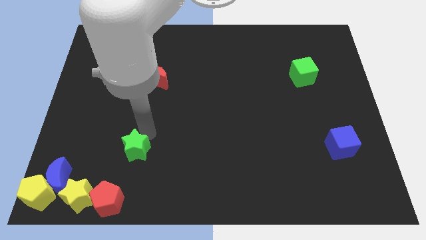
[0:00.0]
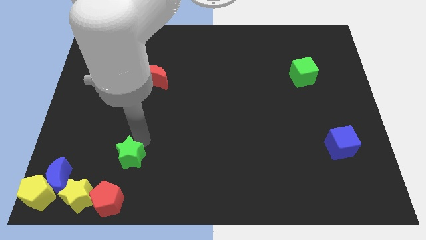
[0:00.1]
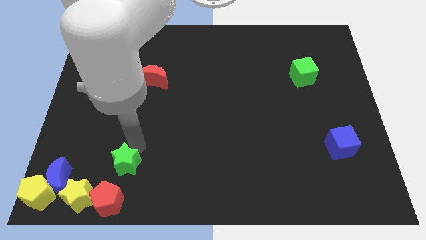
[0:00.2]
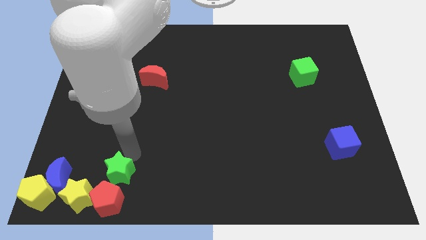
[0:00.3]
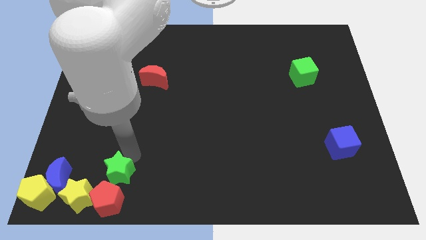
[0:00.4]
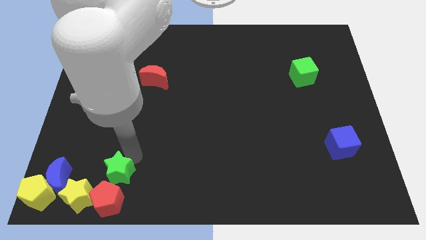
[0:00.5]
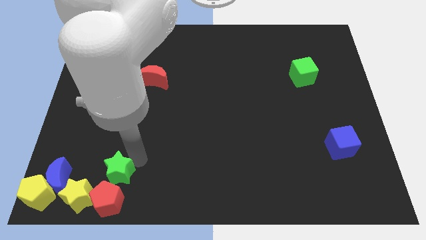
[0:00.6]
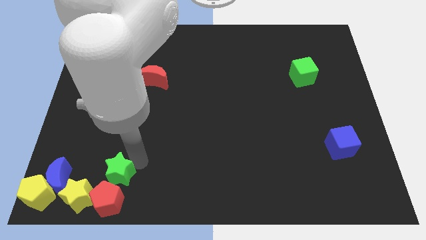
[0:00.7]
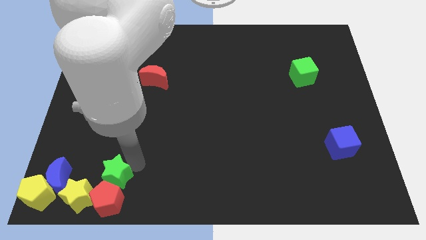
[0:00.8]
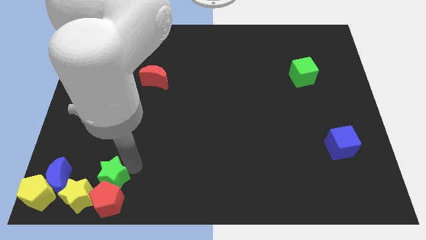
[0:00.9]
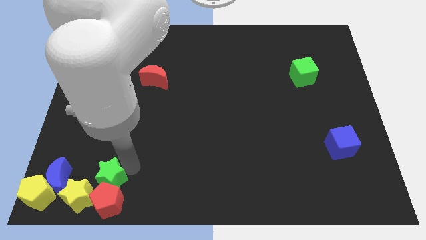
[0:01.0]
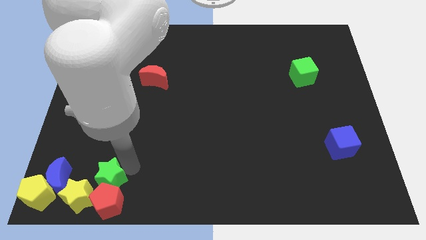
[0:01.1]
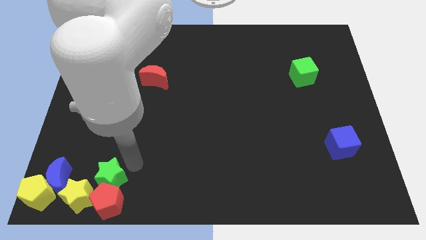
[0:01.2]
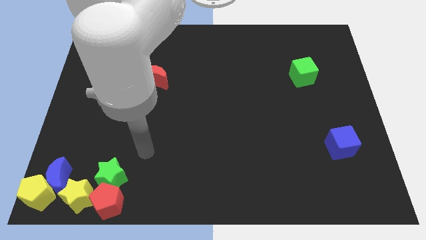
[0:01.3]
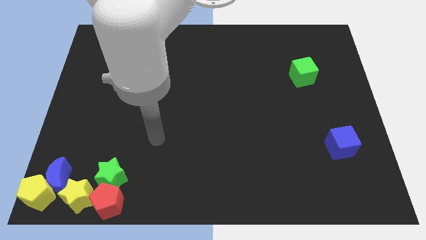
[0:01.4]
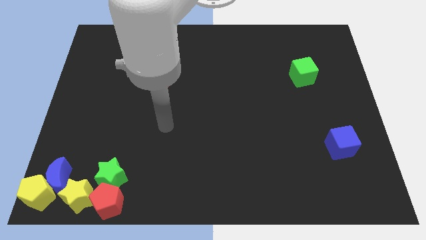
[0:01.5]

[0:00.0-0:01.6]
push the green star to the group of blocks

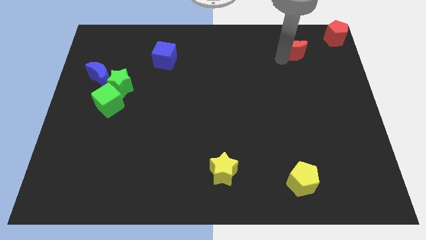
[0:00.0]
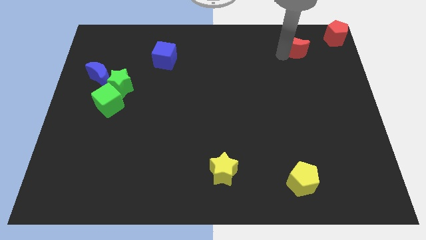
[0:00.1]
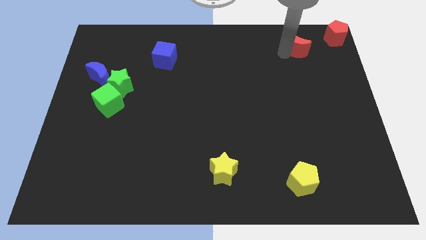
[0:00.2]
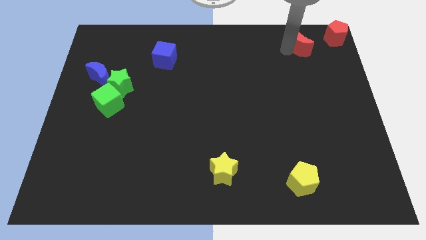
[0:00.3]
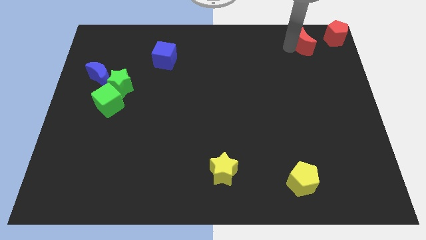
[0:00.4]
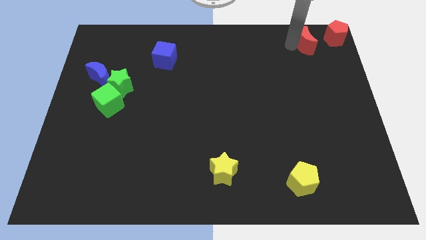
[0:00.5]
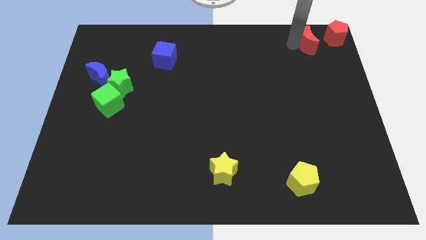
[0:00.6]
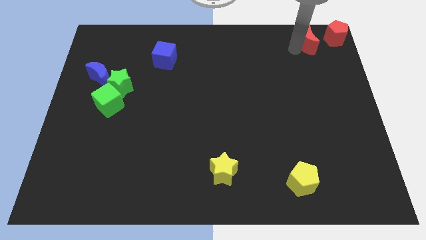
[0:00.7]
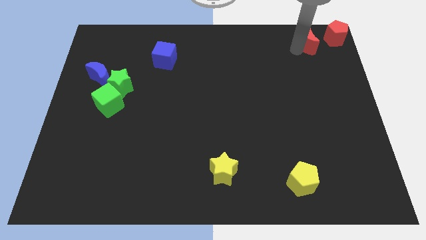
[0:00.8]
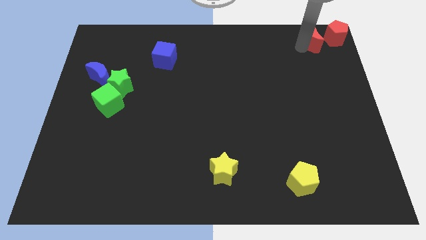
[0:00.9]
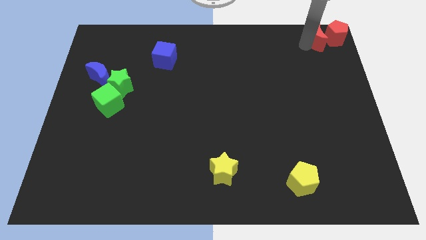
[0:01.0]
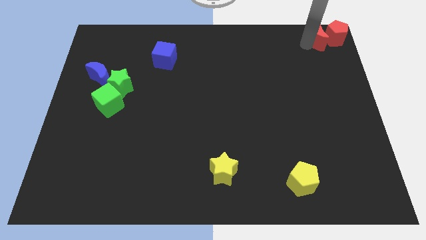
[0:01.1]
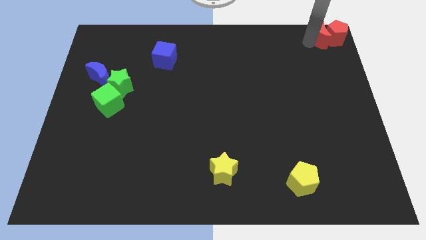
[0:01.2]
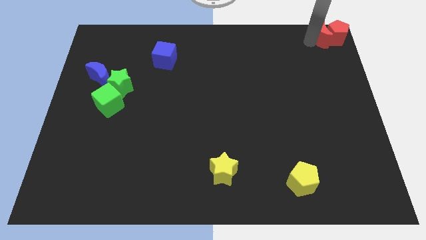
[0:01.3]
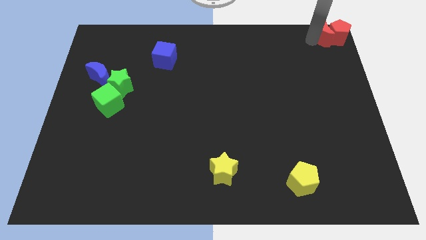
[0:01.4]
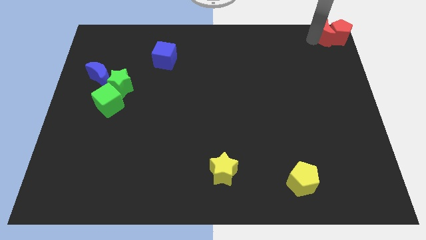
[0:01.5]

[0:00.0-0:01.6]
move the red moon into the red pentagon

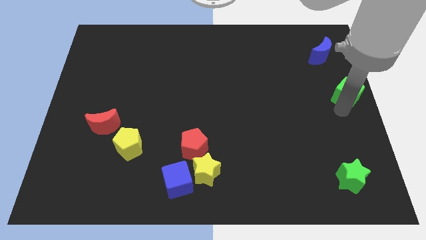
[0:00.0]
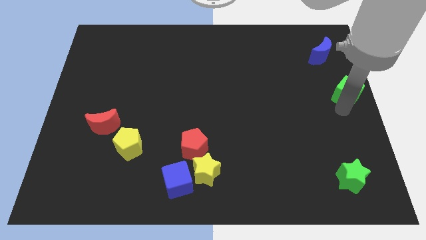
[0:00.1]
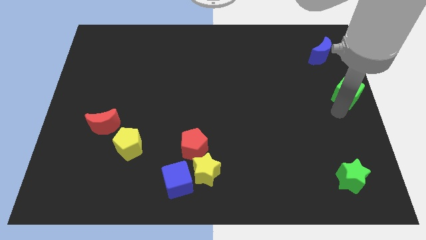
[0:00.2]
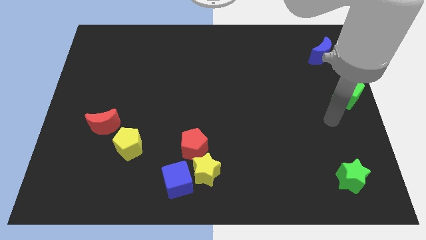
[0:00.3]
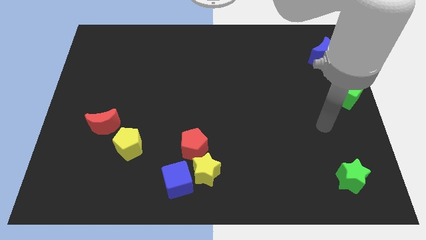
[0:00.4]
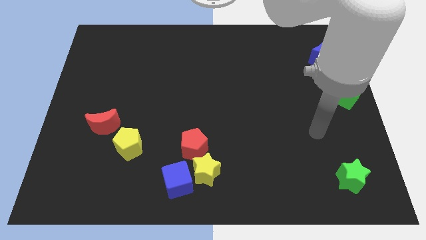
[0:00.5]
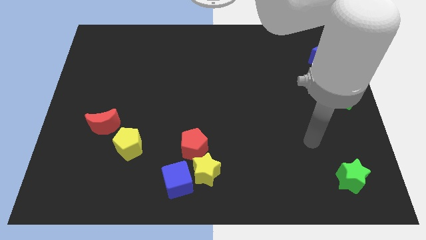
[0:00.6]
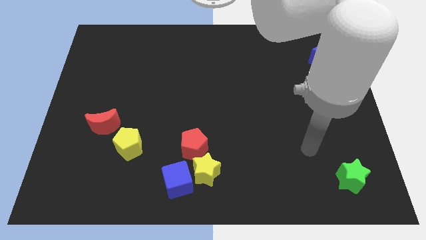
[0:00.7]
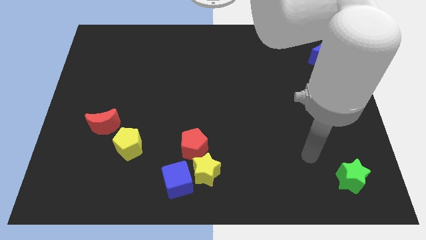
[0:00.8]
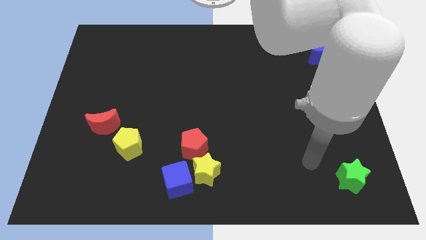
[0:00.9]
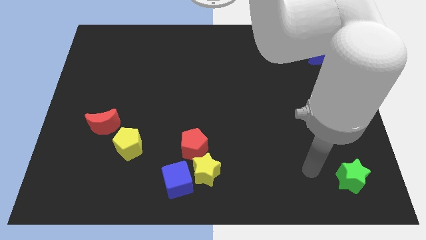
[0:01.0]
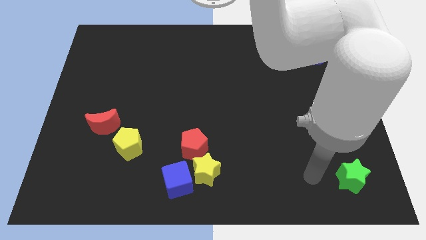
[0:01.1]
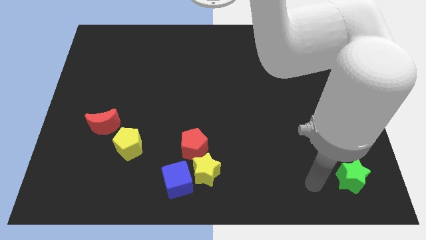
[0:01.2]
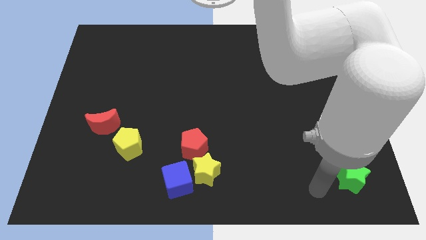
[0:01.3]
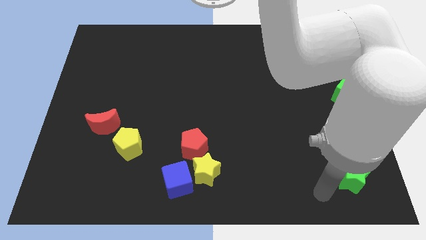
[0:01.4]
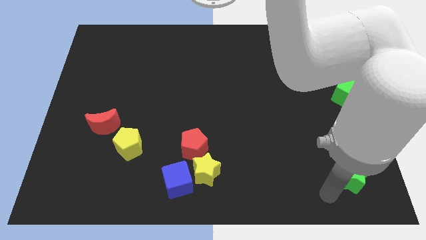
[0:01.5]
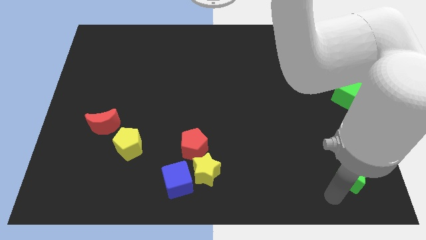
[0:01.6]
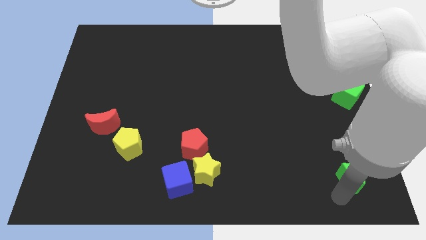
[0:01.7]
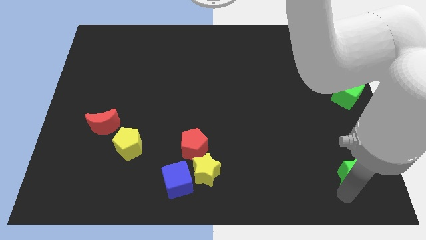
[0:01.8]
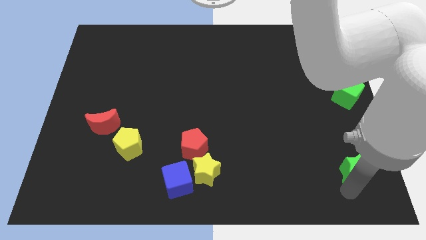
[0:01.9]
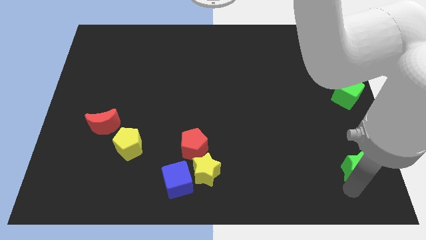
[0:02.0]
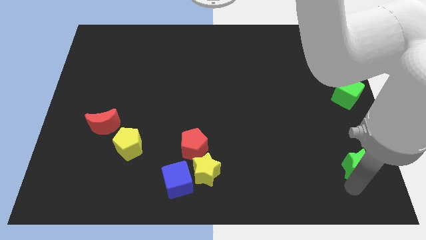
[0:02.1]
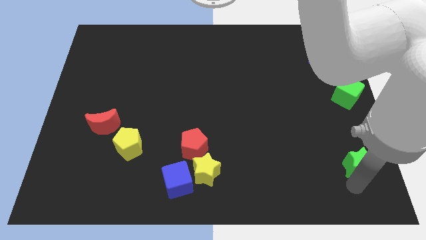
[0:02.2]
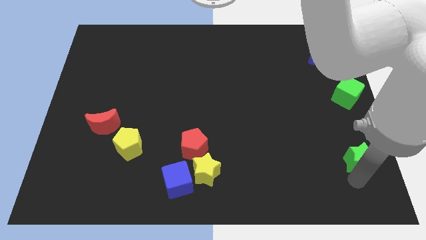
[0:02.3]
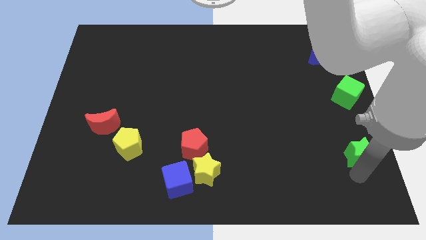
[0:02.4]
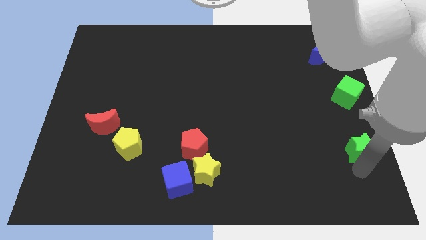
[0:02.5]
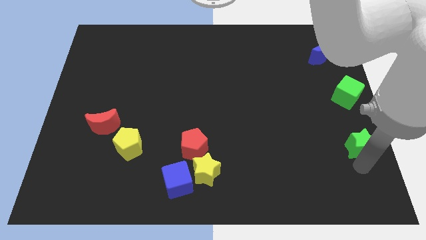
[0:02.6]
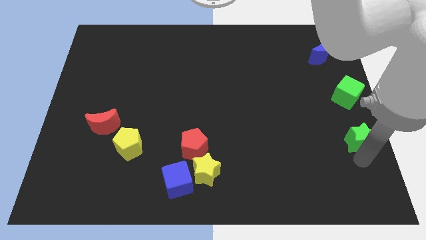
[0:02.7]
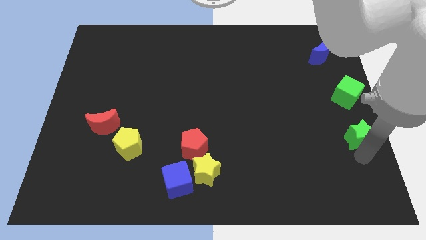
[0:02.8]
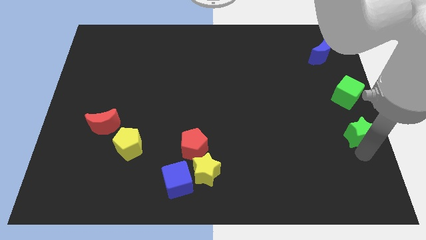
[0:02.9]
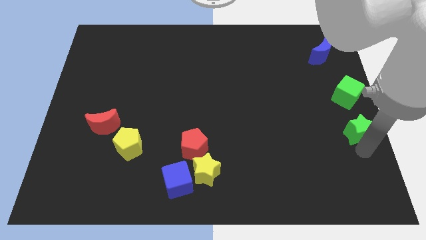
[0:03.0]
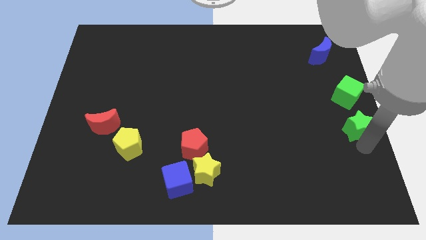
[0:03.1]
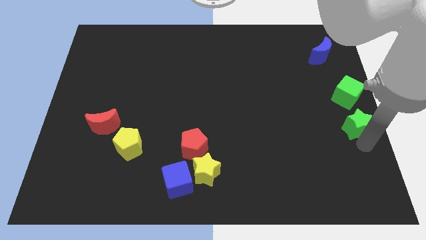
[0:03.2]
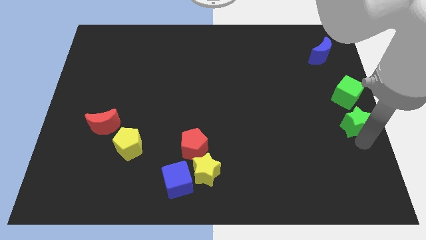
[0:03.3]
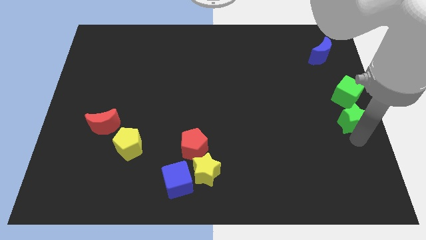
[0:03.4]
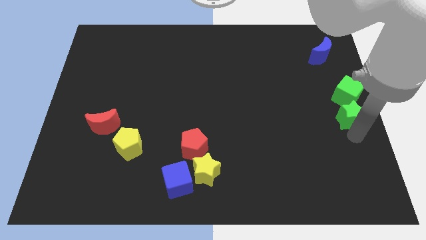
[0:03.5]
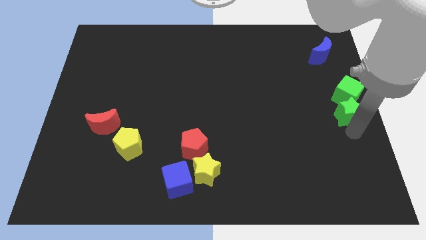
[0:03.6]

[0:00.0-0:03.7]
put the green star below the green cube

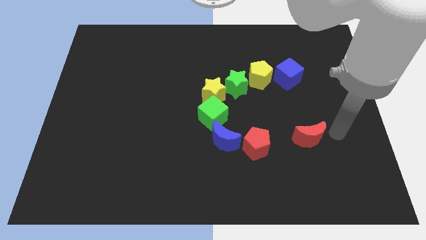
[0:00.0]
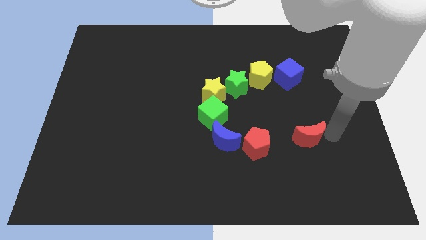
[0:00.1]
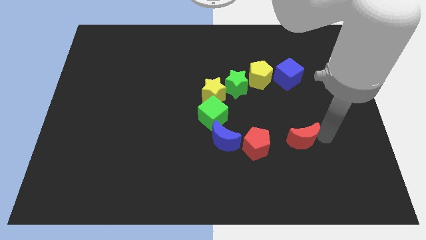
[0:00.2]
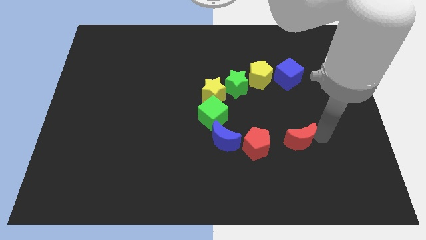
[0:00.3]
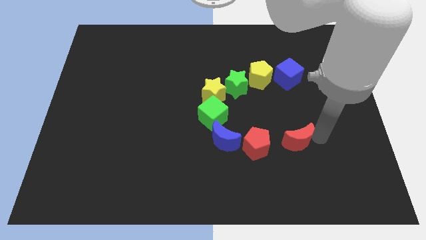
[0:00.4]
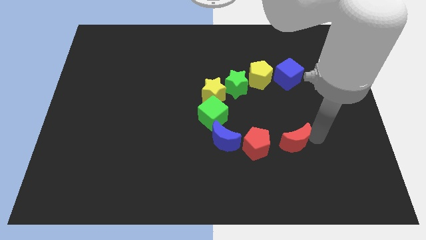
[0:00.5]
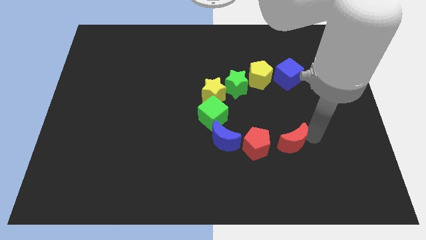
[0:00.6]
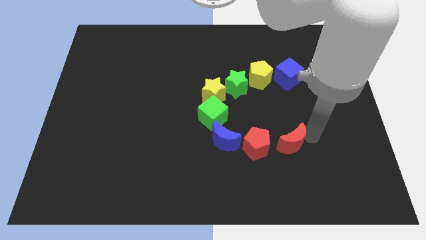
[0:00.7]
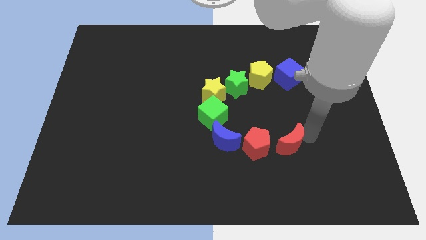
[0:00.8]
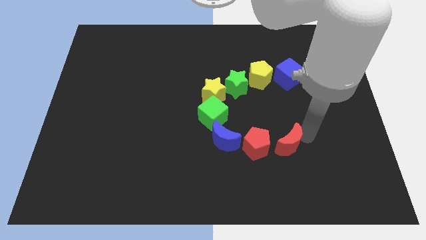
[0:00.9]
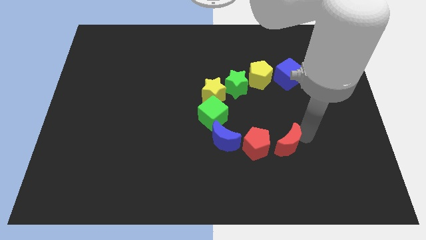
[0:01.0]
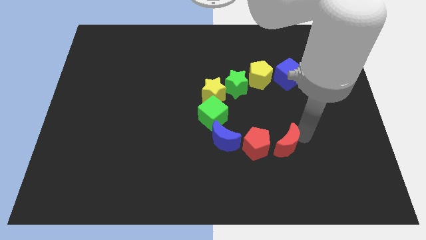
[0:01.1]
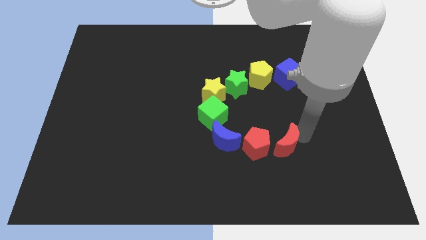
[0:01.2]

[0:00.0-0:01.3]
place the red crescent right to the red pentagon

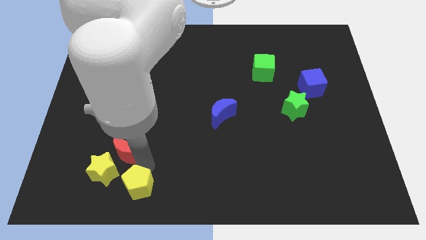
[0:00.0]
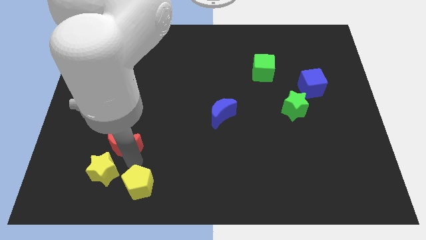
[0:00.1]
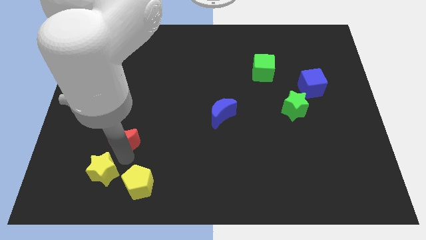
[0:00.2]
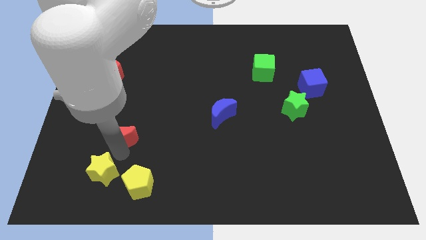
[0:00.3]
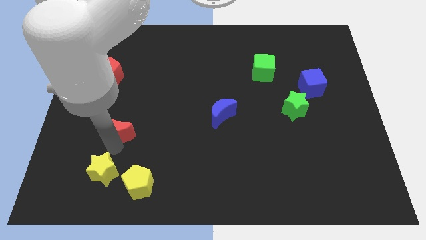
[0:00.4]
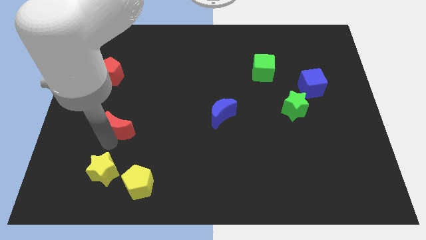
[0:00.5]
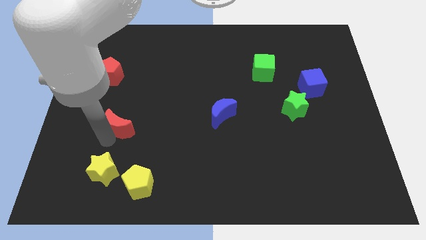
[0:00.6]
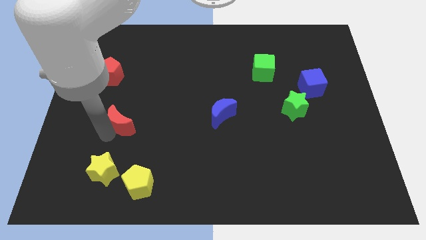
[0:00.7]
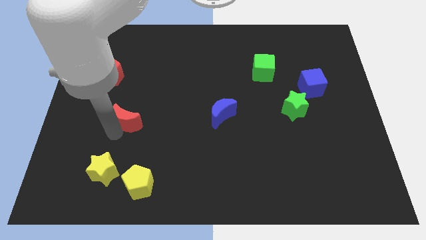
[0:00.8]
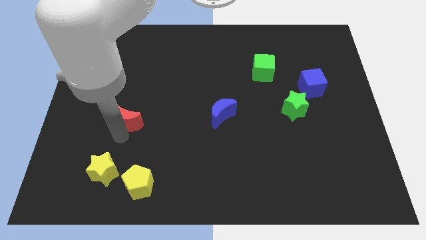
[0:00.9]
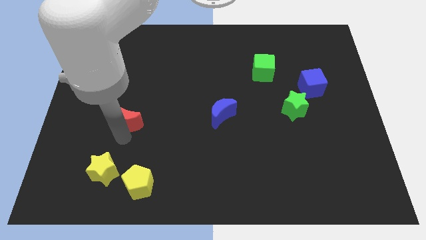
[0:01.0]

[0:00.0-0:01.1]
move red moon up to the left of blue moon
